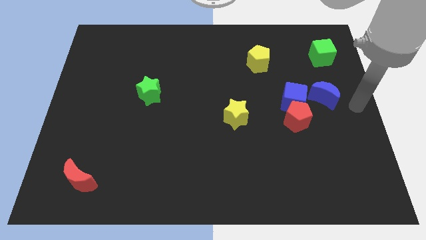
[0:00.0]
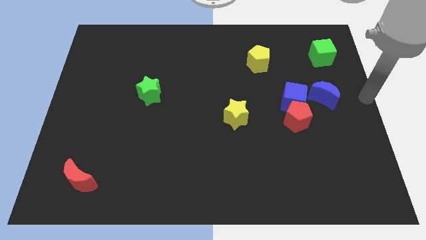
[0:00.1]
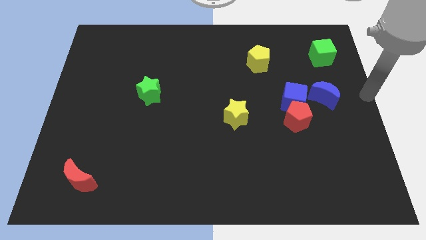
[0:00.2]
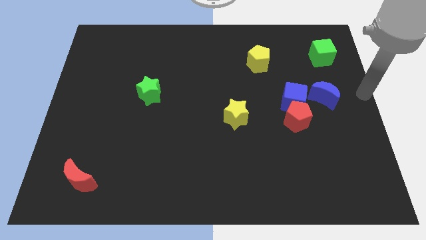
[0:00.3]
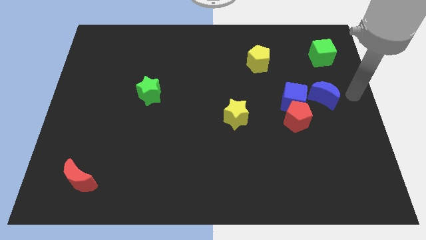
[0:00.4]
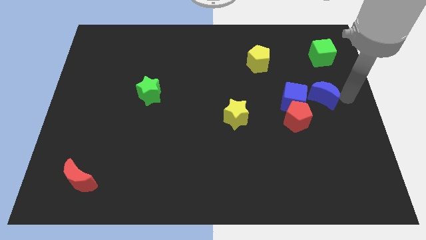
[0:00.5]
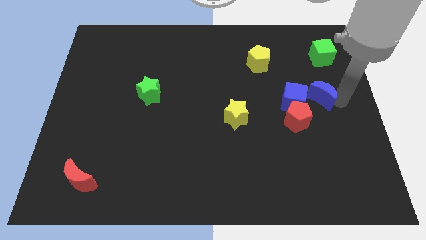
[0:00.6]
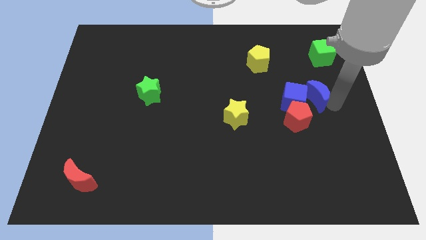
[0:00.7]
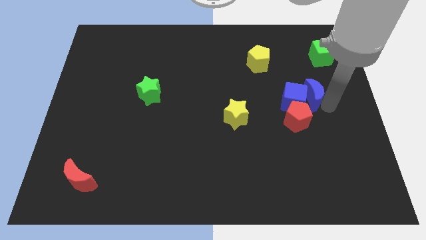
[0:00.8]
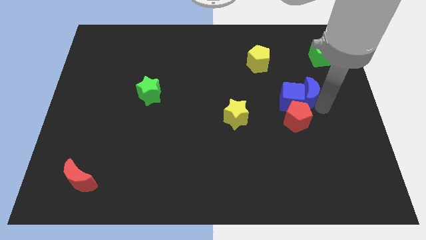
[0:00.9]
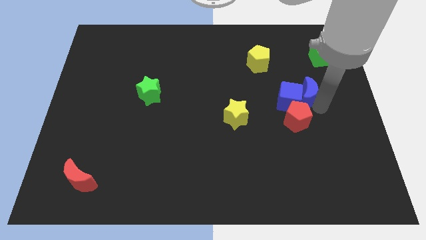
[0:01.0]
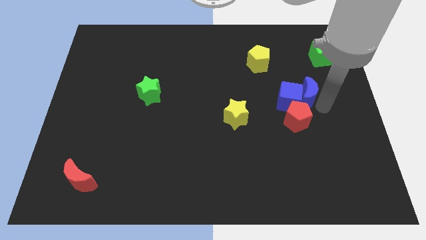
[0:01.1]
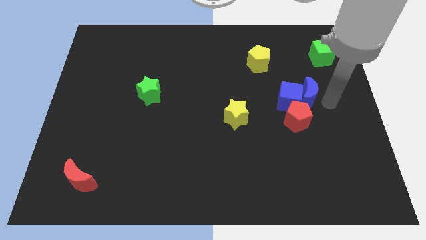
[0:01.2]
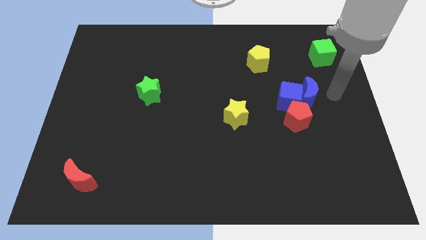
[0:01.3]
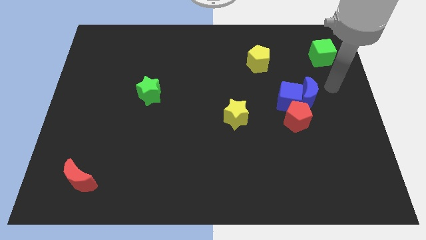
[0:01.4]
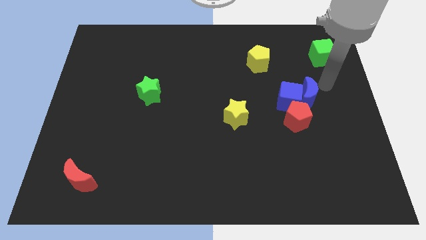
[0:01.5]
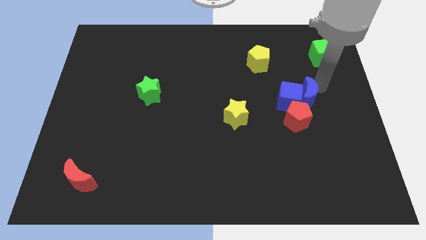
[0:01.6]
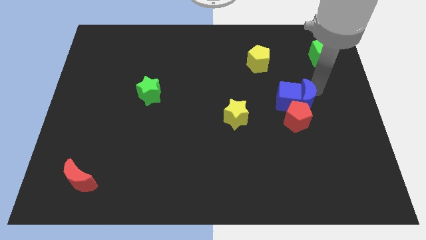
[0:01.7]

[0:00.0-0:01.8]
push the blue moon into the blue cube

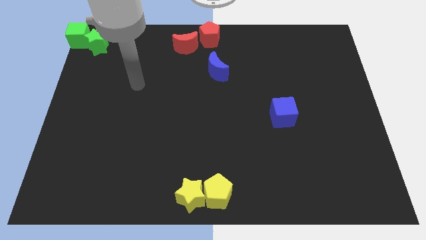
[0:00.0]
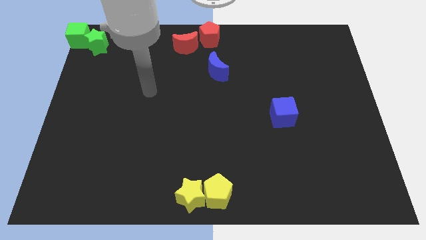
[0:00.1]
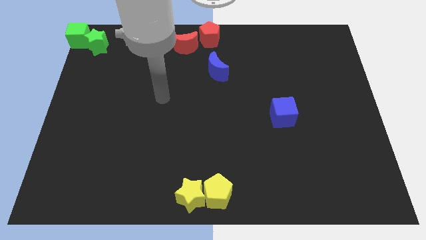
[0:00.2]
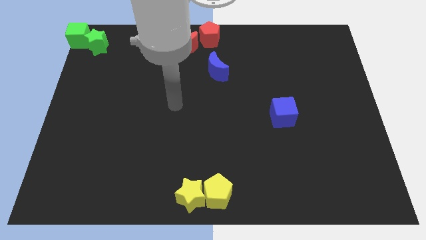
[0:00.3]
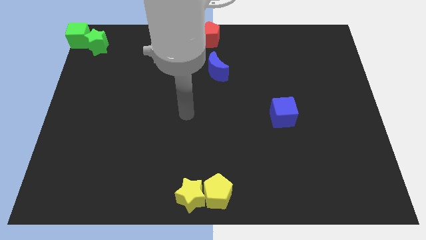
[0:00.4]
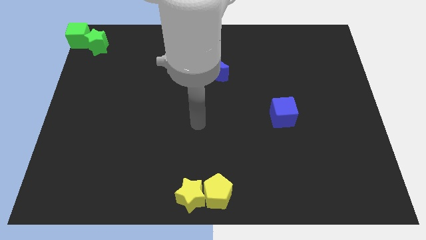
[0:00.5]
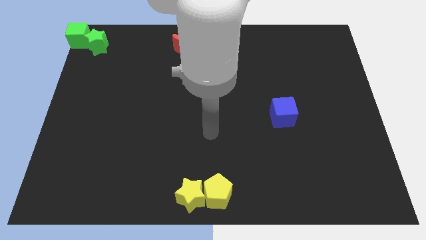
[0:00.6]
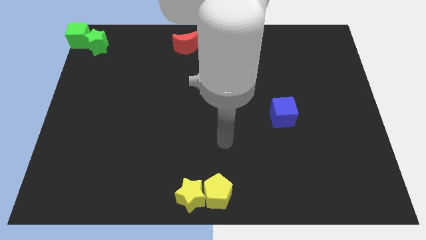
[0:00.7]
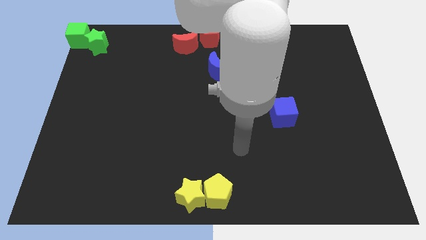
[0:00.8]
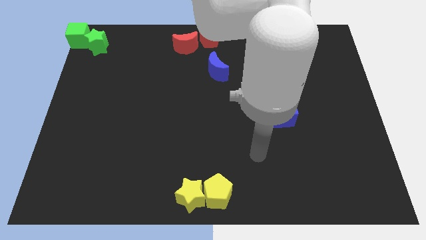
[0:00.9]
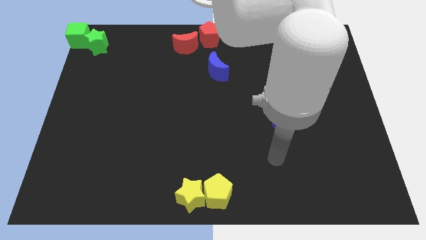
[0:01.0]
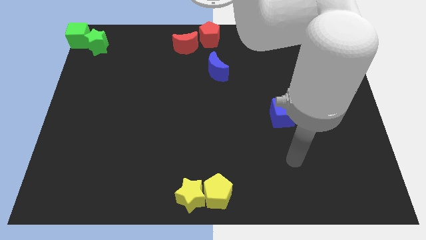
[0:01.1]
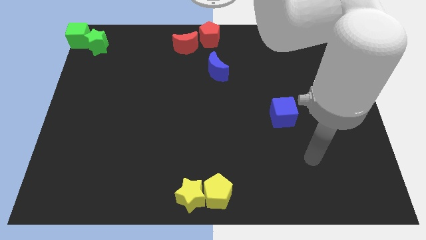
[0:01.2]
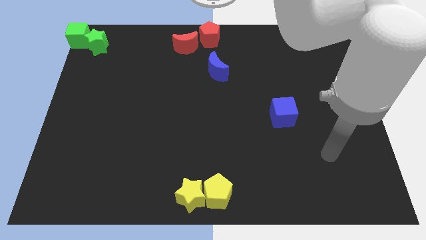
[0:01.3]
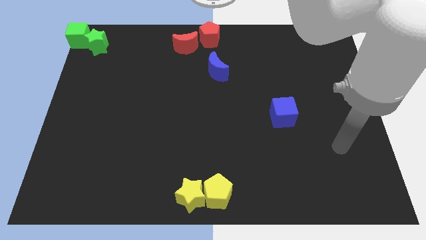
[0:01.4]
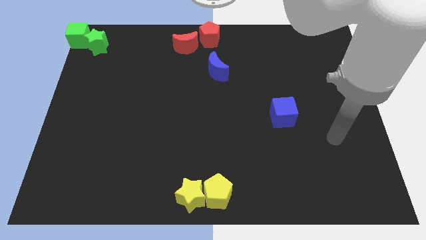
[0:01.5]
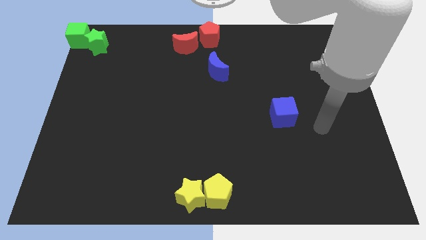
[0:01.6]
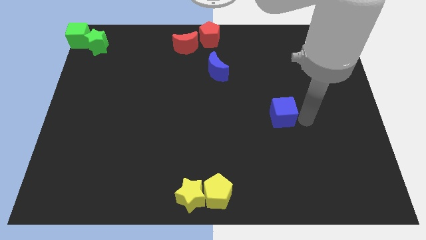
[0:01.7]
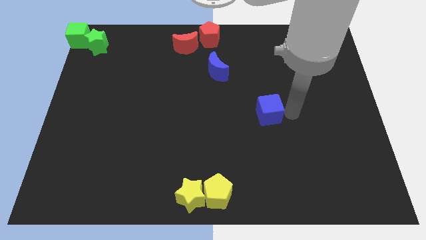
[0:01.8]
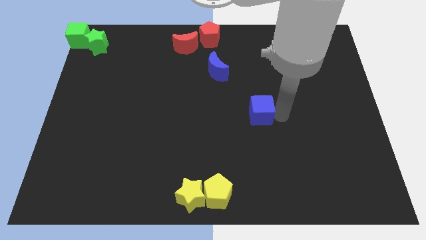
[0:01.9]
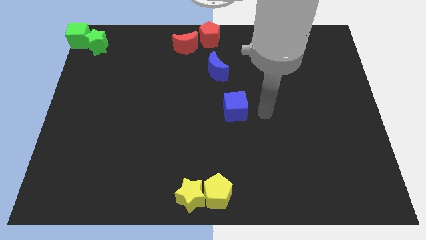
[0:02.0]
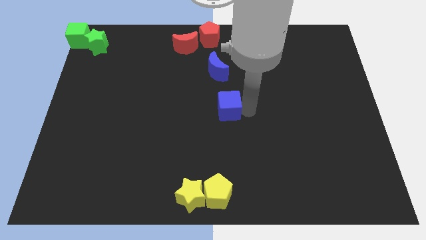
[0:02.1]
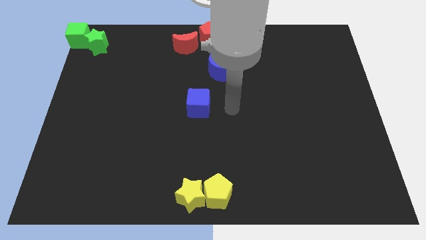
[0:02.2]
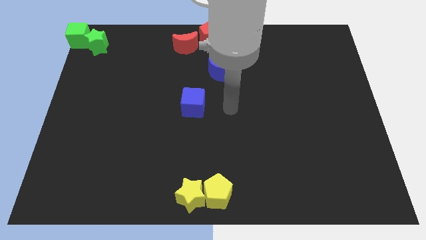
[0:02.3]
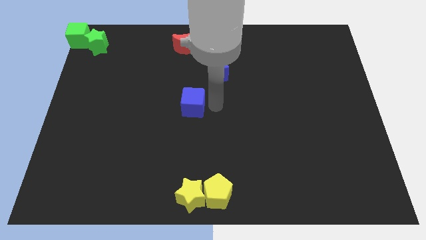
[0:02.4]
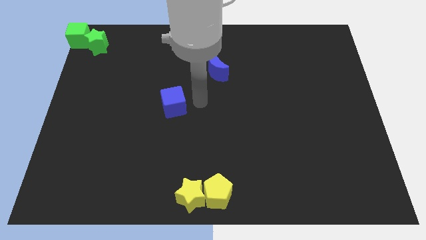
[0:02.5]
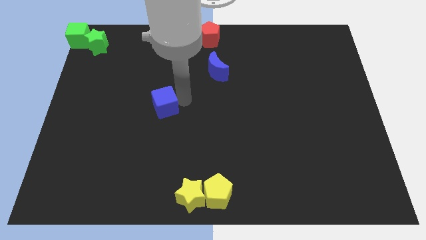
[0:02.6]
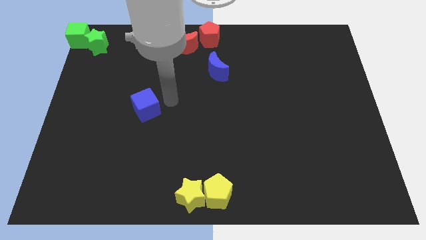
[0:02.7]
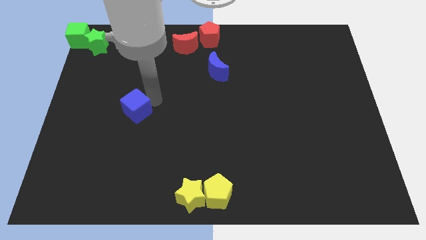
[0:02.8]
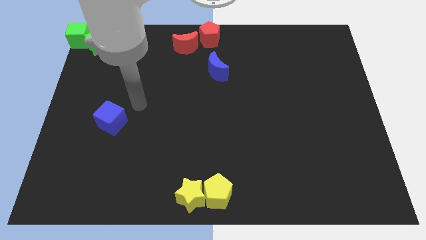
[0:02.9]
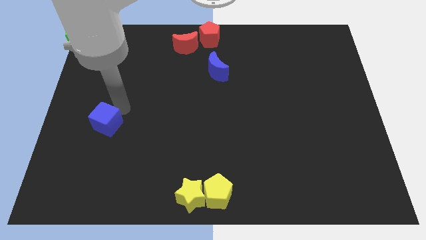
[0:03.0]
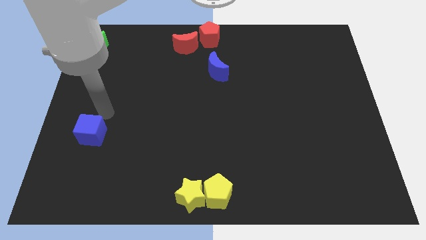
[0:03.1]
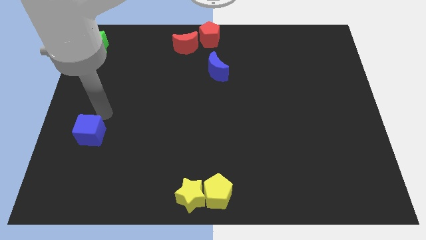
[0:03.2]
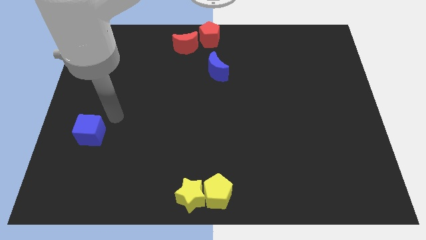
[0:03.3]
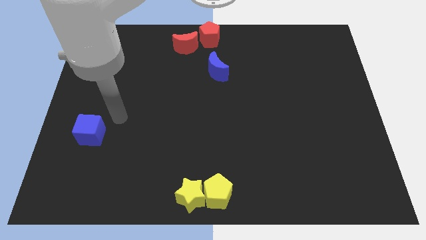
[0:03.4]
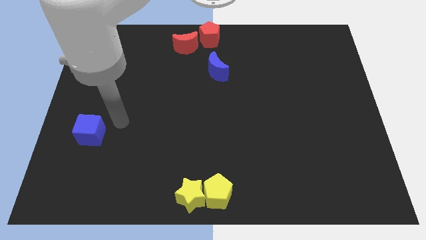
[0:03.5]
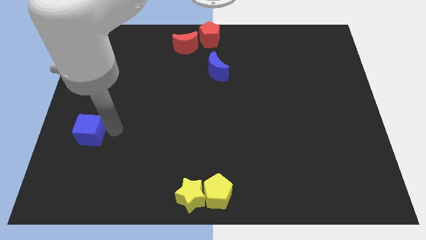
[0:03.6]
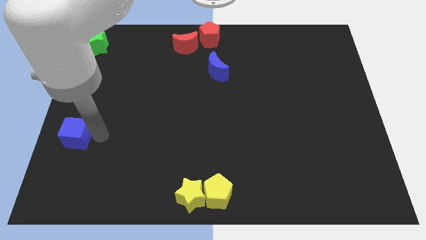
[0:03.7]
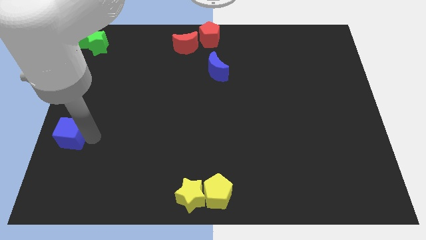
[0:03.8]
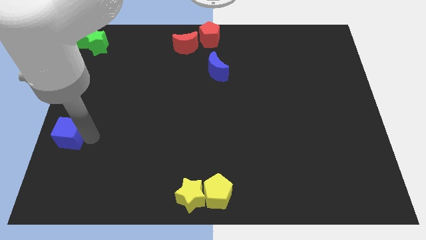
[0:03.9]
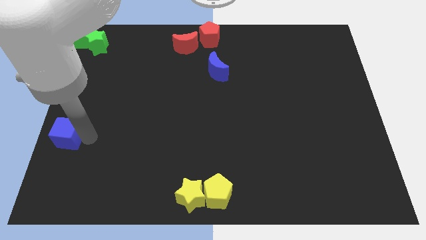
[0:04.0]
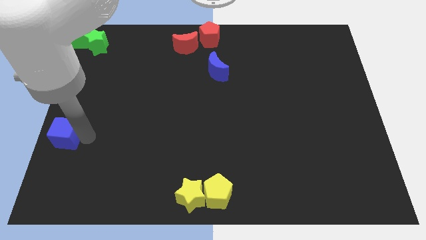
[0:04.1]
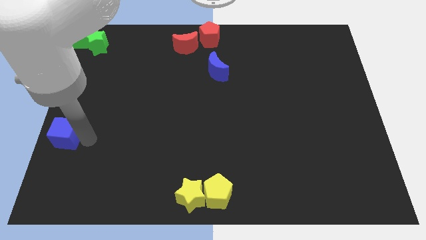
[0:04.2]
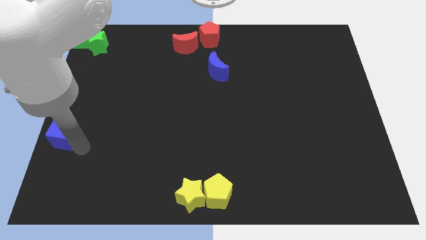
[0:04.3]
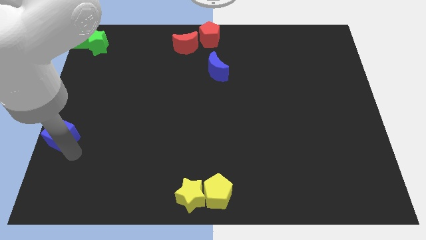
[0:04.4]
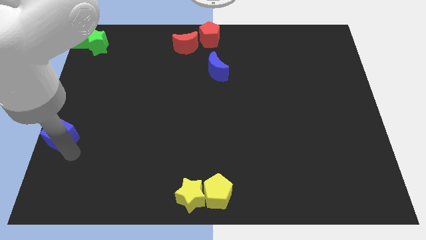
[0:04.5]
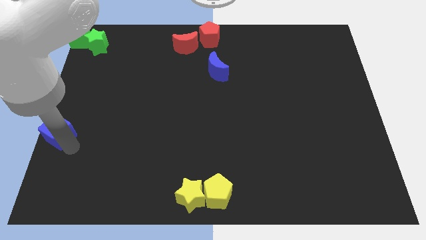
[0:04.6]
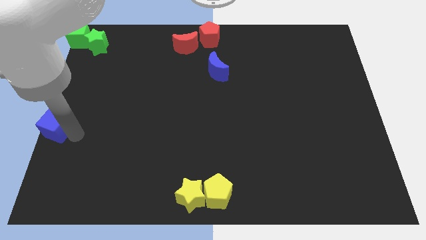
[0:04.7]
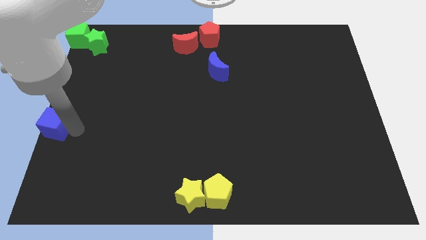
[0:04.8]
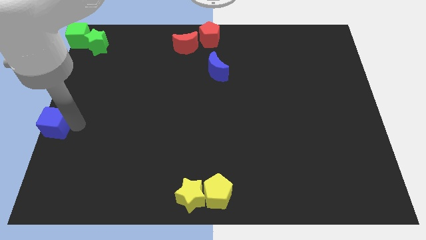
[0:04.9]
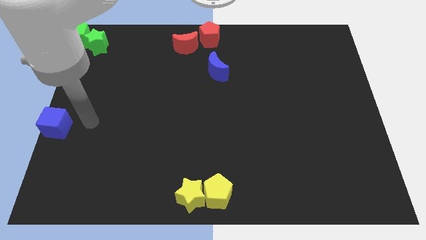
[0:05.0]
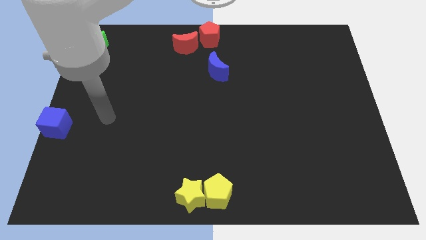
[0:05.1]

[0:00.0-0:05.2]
push the blue cube towards left corner of the board

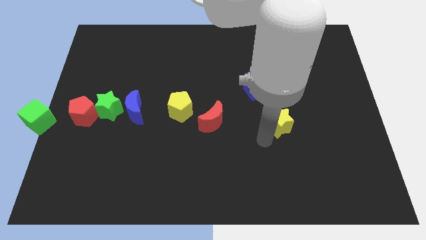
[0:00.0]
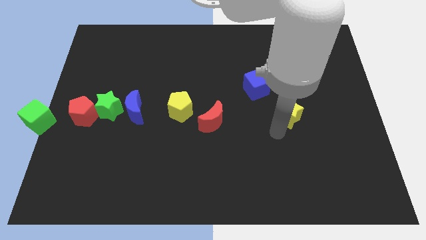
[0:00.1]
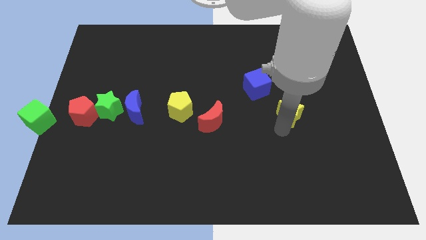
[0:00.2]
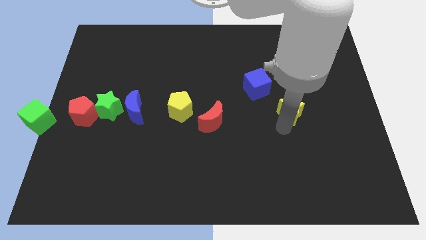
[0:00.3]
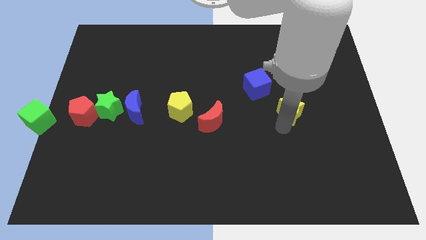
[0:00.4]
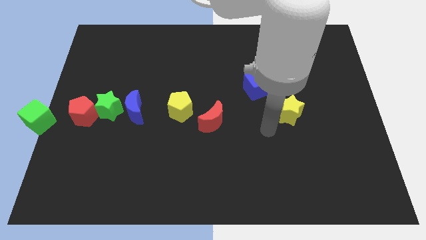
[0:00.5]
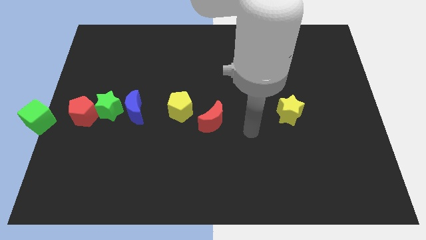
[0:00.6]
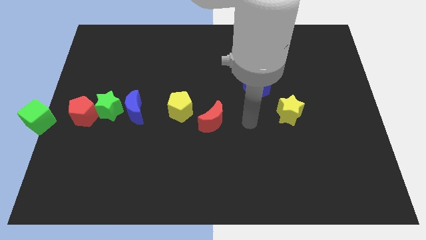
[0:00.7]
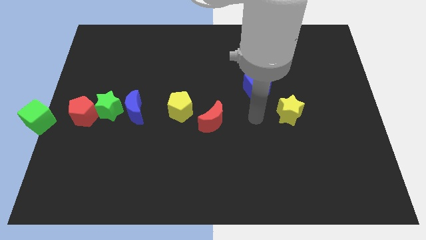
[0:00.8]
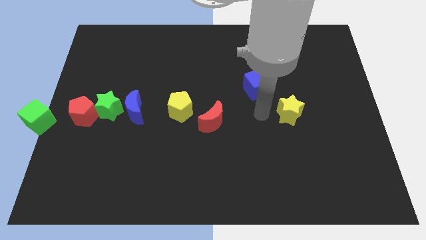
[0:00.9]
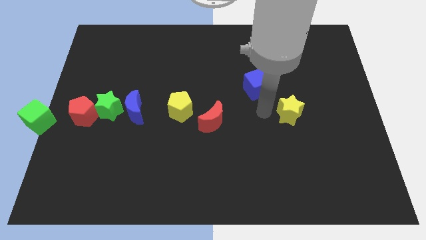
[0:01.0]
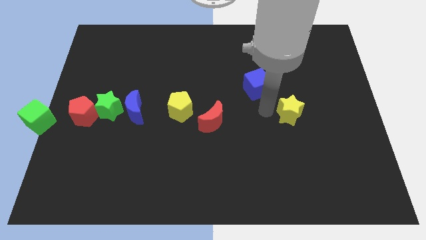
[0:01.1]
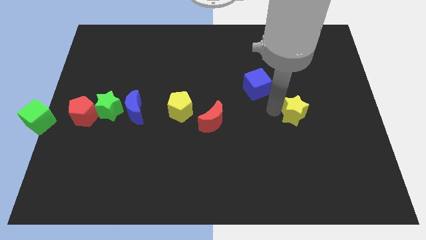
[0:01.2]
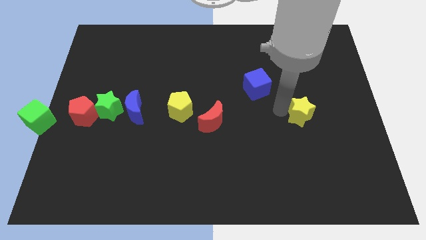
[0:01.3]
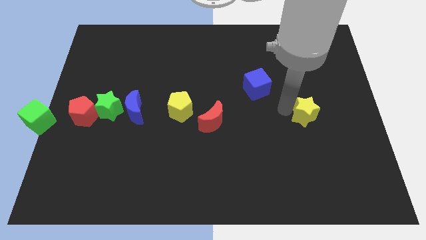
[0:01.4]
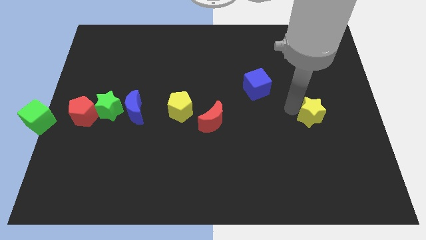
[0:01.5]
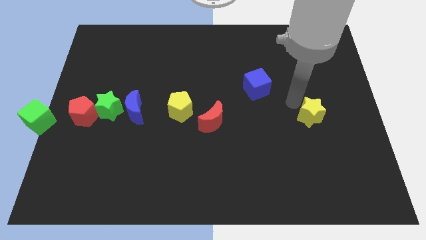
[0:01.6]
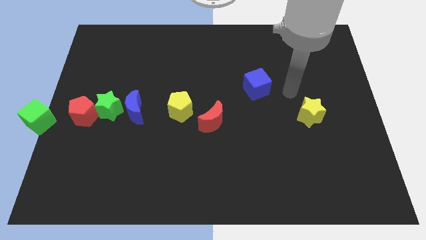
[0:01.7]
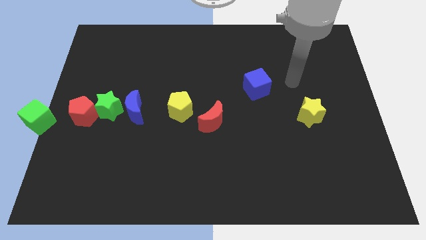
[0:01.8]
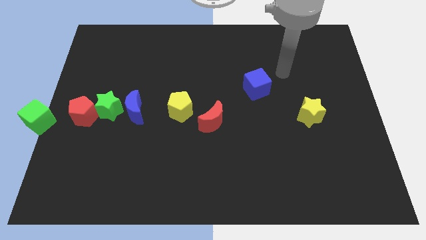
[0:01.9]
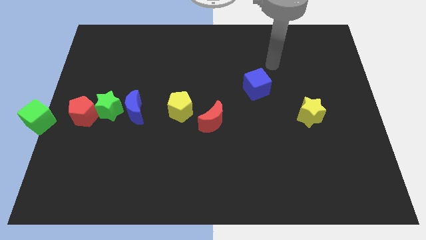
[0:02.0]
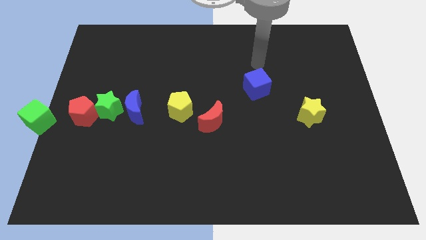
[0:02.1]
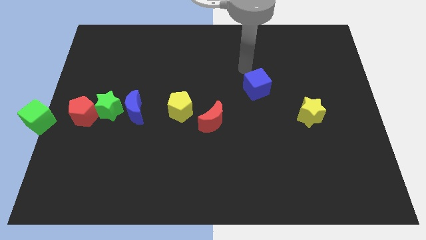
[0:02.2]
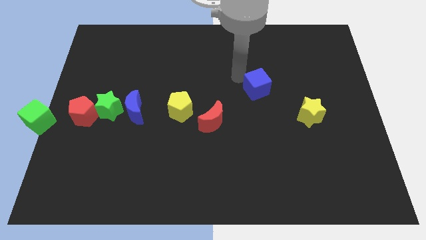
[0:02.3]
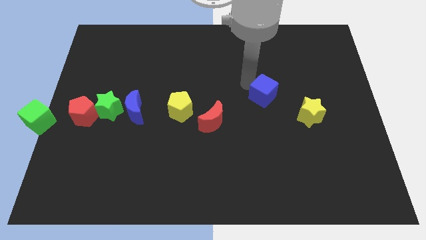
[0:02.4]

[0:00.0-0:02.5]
move the yellow star diagonally below to the blue cube
